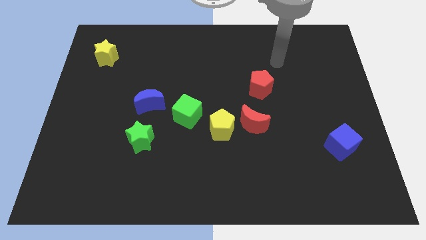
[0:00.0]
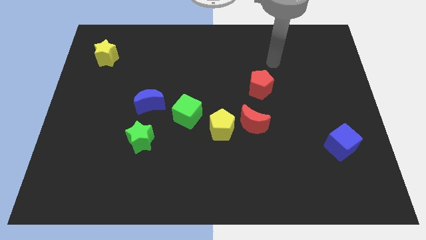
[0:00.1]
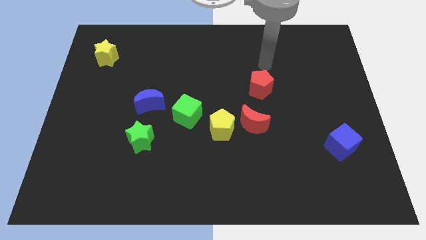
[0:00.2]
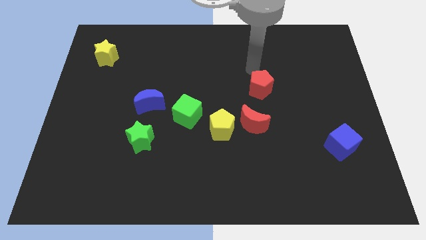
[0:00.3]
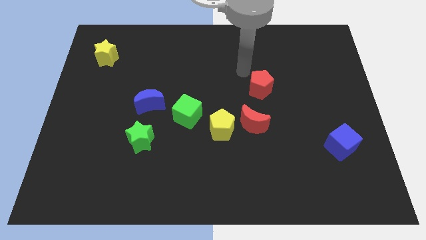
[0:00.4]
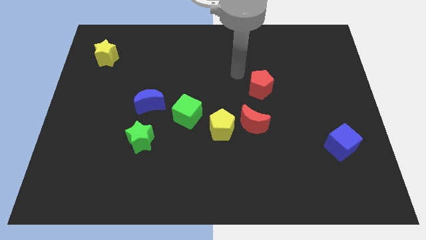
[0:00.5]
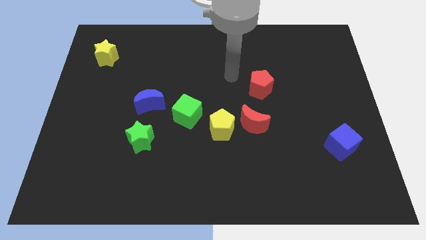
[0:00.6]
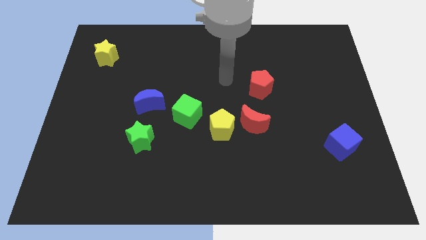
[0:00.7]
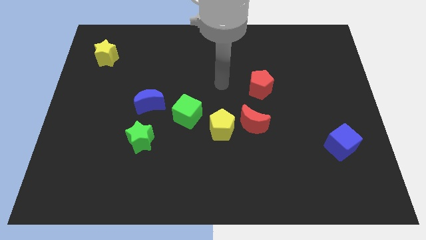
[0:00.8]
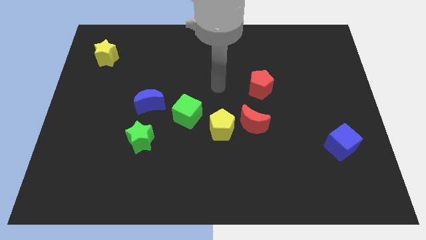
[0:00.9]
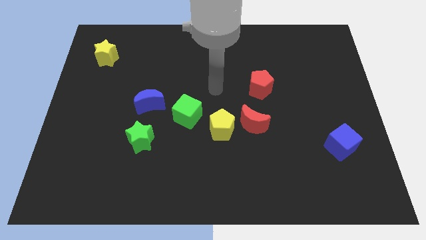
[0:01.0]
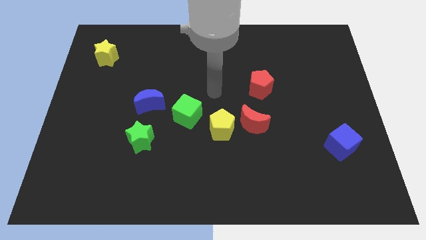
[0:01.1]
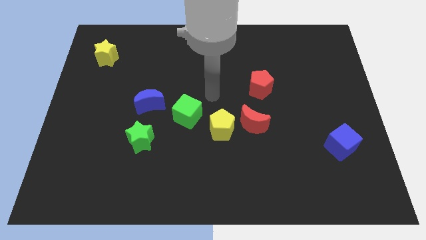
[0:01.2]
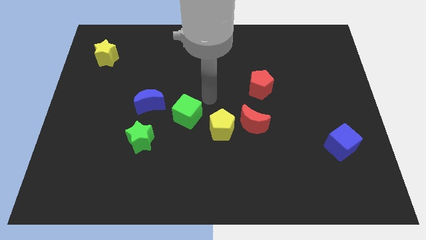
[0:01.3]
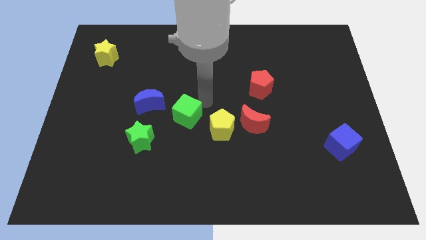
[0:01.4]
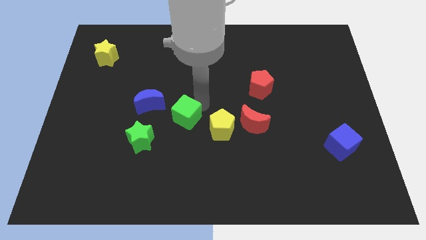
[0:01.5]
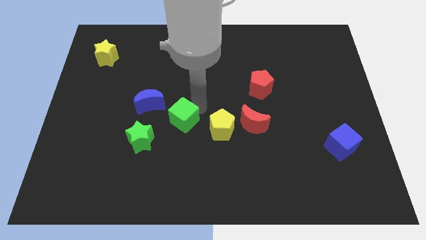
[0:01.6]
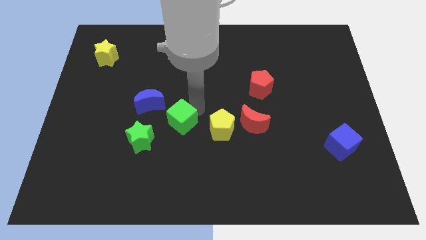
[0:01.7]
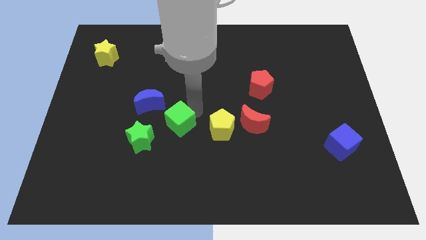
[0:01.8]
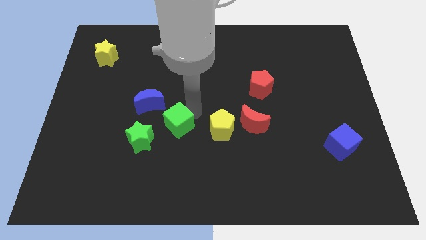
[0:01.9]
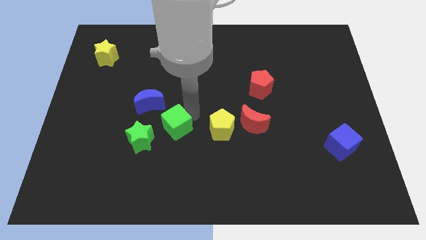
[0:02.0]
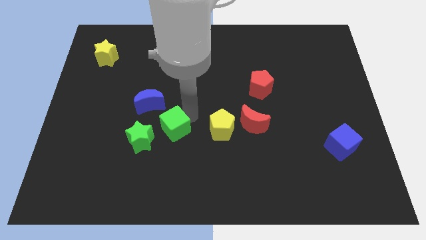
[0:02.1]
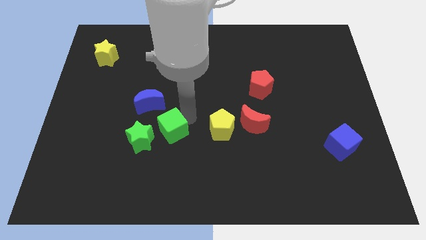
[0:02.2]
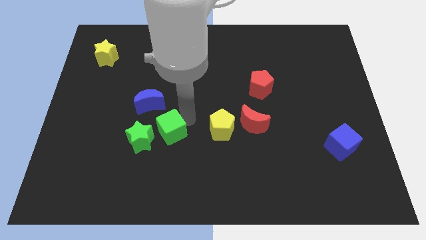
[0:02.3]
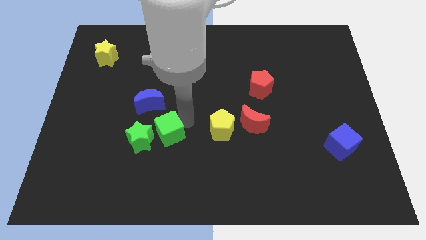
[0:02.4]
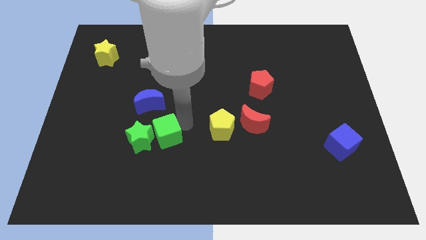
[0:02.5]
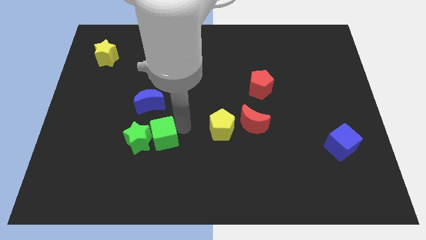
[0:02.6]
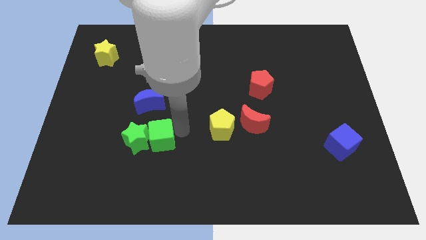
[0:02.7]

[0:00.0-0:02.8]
move the green cube close to the green star

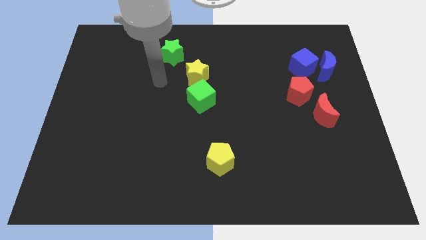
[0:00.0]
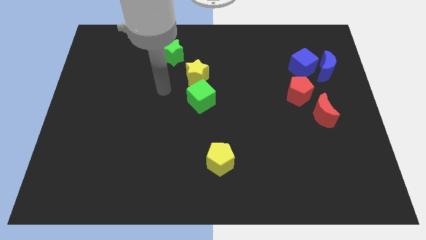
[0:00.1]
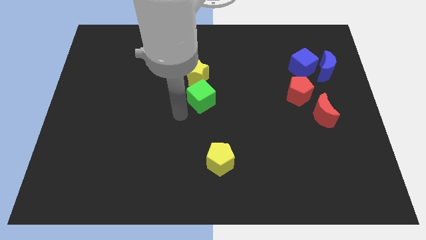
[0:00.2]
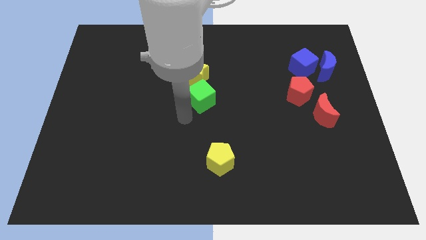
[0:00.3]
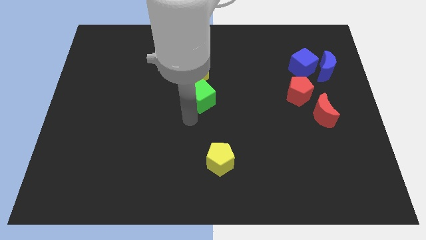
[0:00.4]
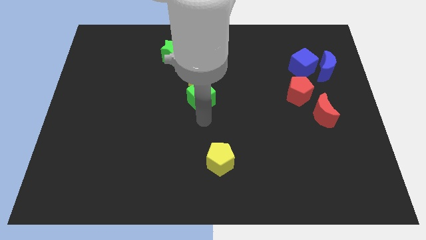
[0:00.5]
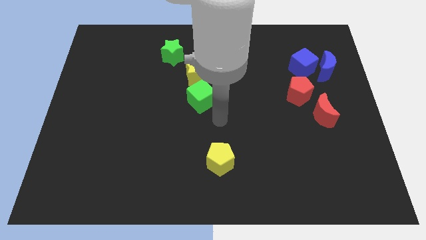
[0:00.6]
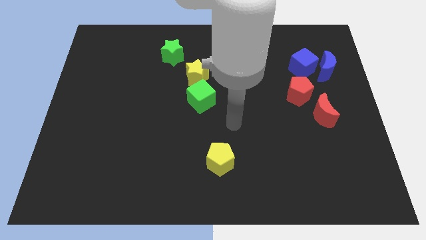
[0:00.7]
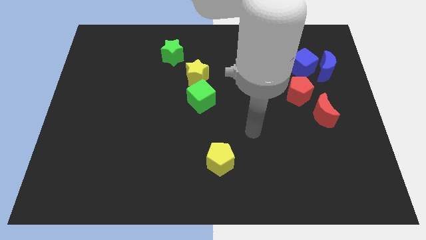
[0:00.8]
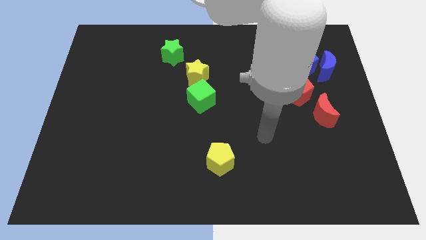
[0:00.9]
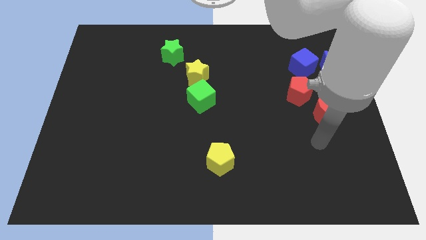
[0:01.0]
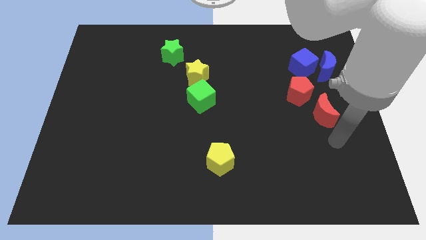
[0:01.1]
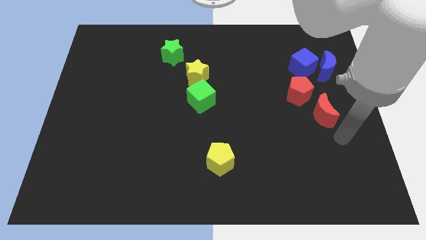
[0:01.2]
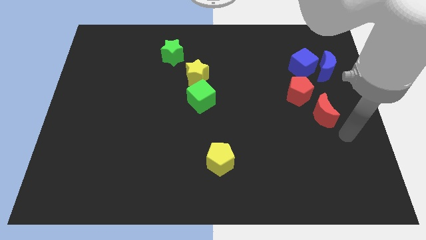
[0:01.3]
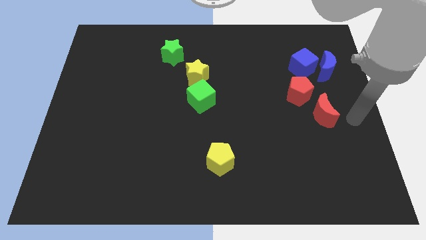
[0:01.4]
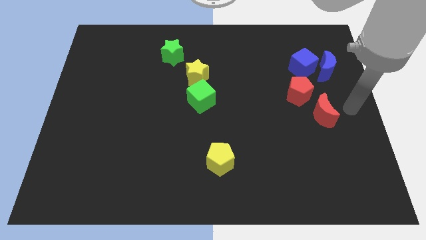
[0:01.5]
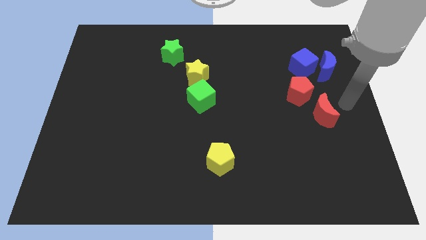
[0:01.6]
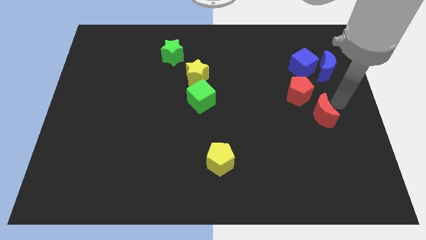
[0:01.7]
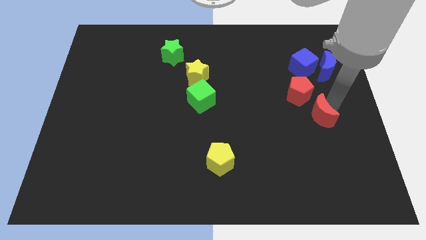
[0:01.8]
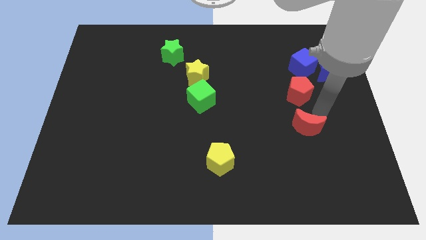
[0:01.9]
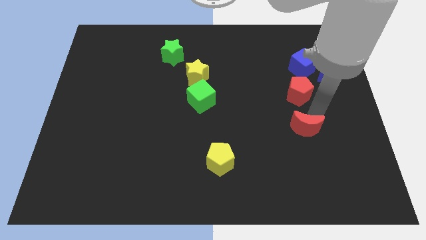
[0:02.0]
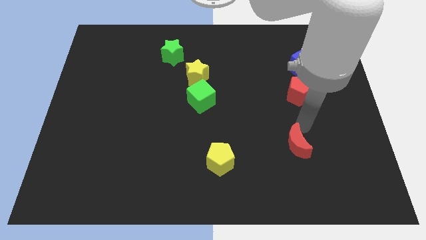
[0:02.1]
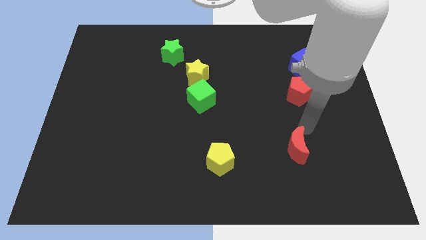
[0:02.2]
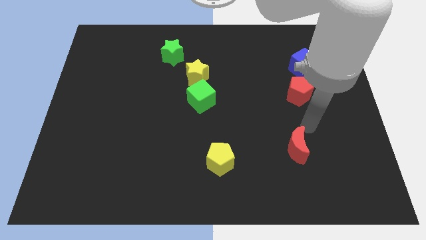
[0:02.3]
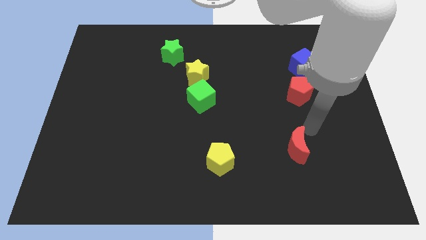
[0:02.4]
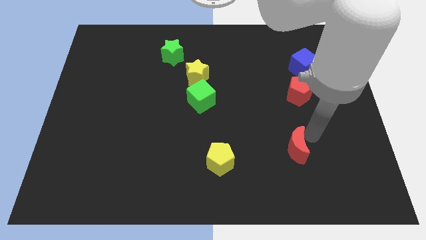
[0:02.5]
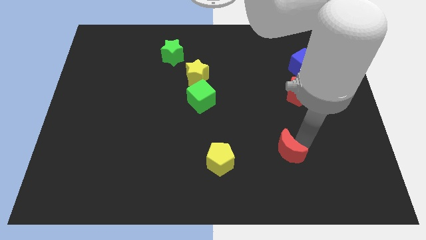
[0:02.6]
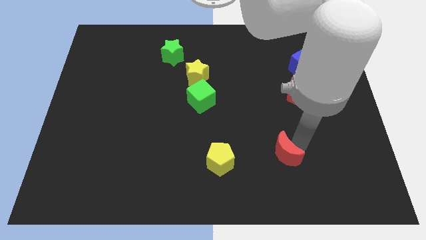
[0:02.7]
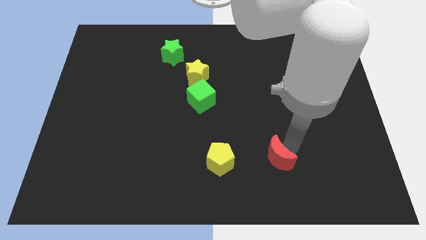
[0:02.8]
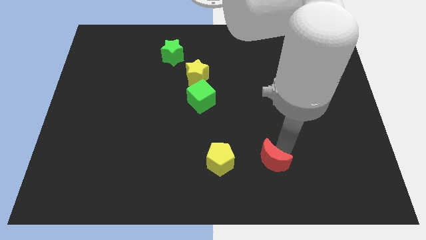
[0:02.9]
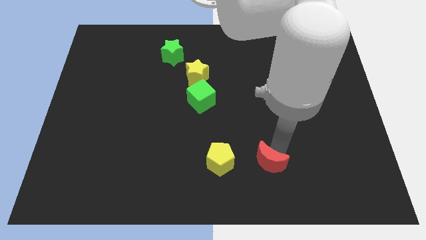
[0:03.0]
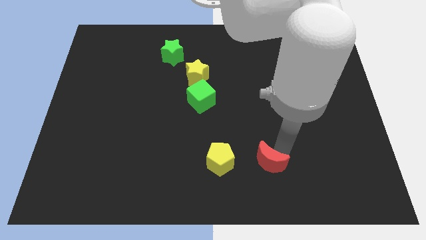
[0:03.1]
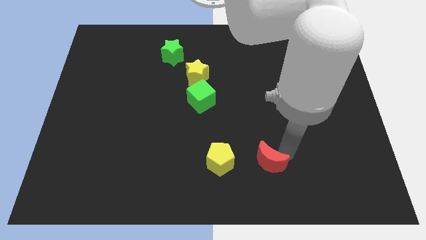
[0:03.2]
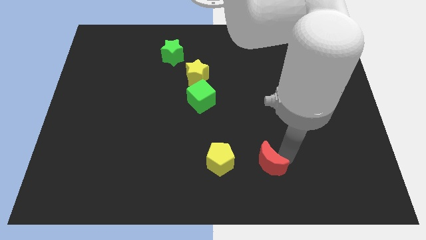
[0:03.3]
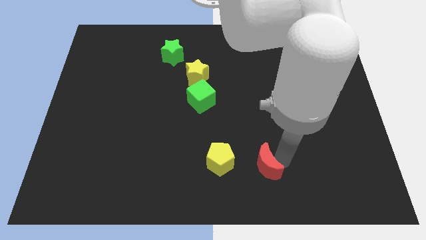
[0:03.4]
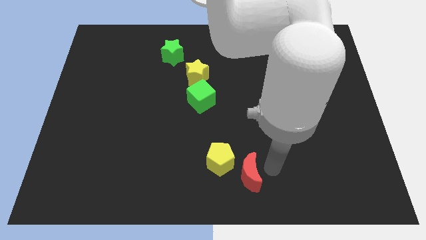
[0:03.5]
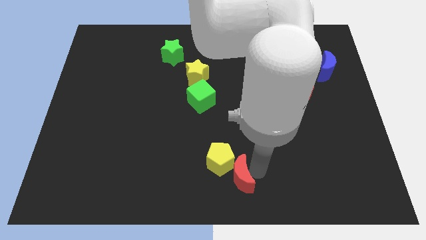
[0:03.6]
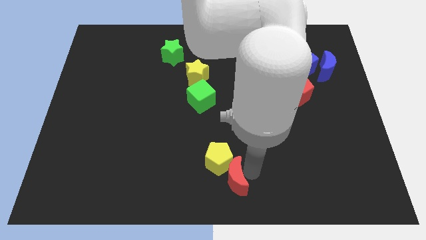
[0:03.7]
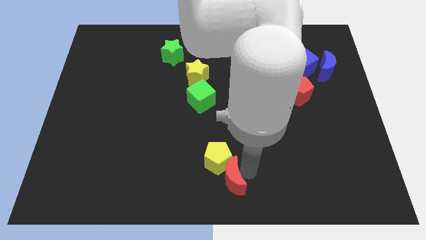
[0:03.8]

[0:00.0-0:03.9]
put the red moon towards the yellow pentagon

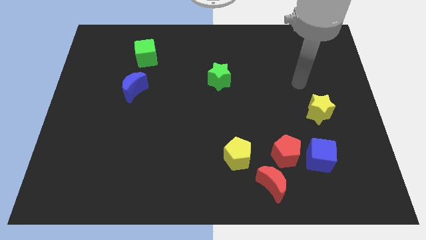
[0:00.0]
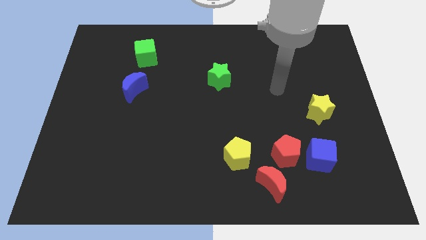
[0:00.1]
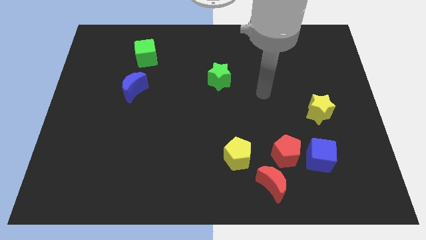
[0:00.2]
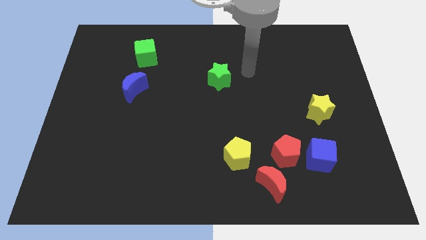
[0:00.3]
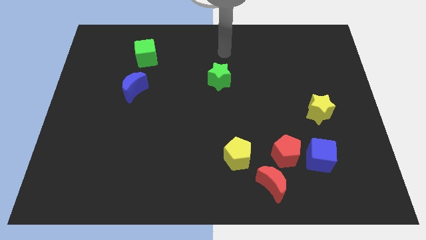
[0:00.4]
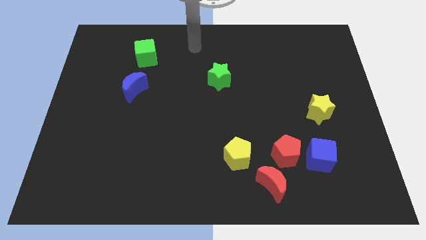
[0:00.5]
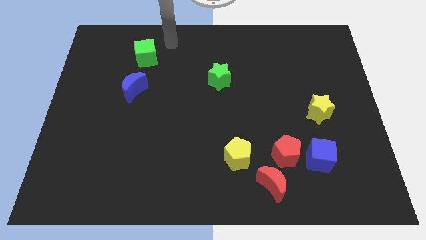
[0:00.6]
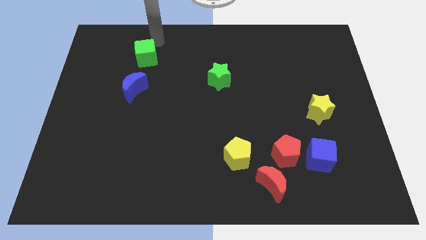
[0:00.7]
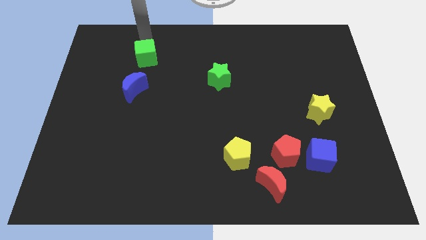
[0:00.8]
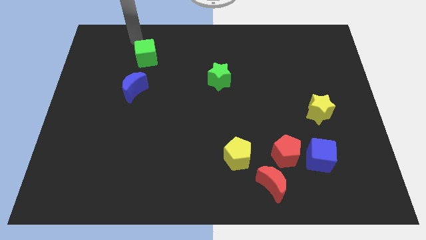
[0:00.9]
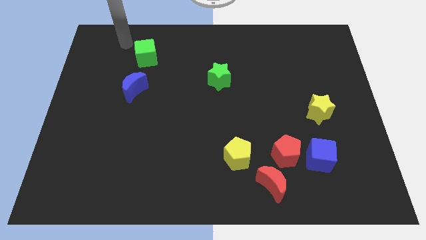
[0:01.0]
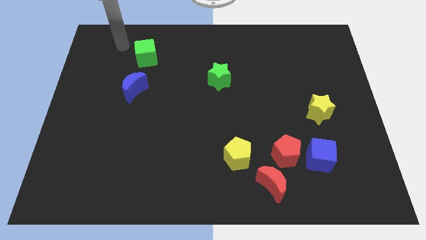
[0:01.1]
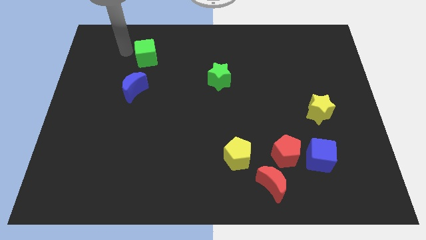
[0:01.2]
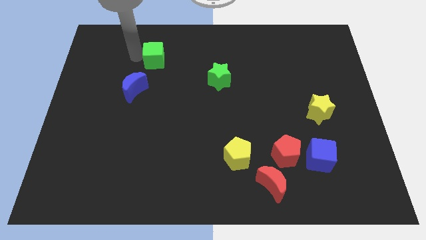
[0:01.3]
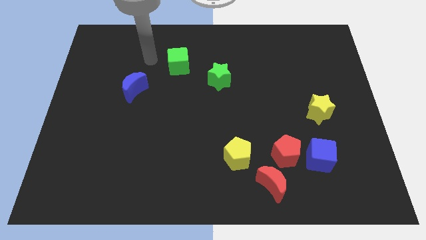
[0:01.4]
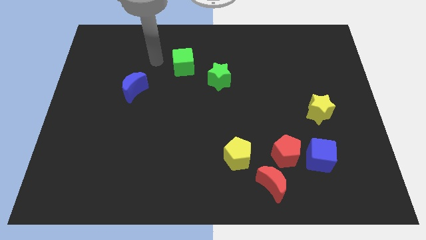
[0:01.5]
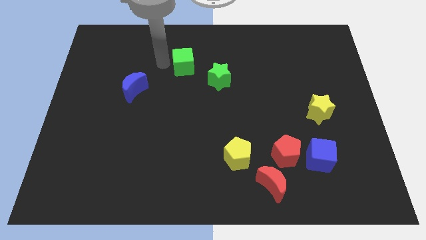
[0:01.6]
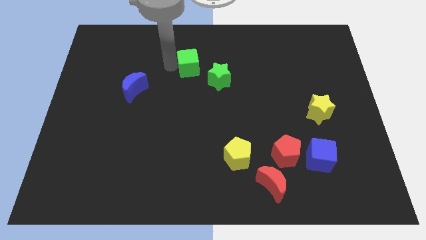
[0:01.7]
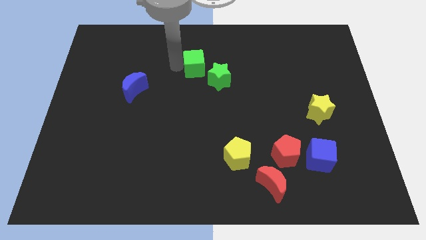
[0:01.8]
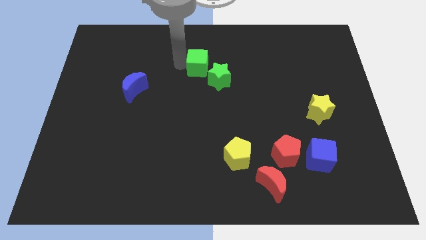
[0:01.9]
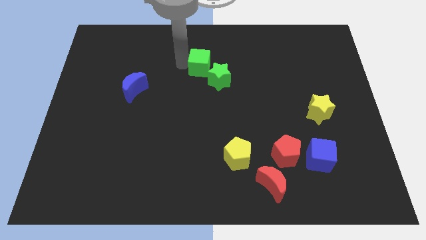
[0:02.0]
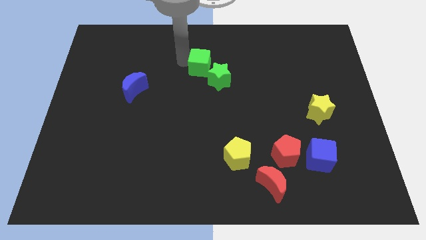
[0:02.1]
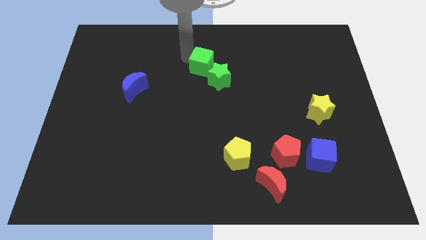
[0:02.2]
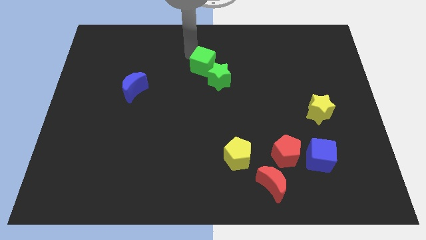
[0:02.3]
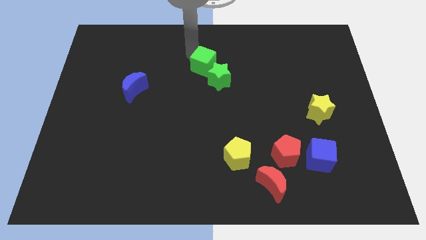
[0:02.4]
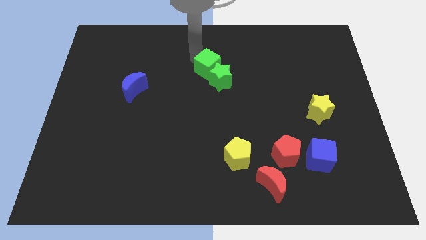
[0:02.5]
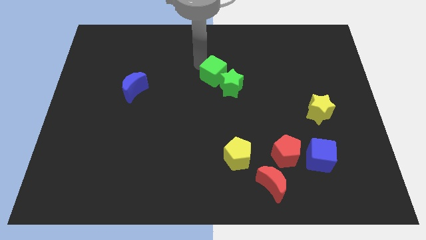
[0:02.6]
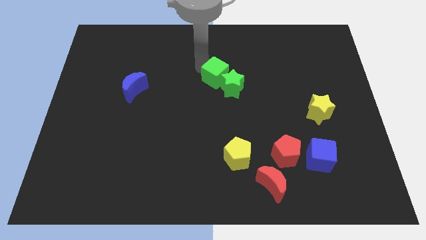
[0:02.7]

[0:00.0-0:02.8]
slide the green cube to the green star
